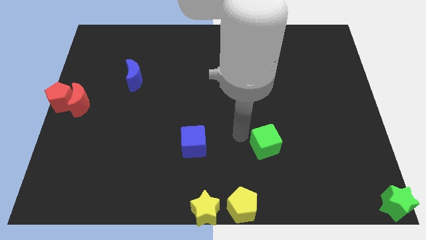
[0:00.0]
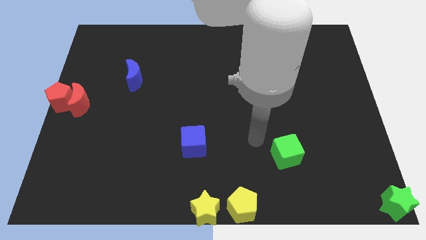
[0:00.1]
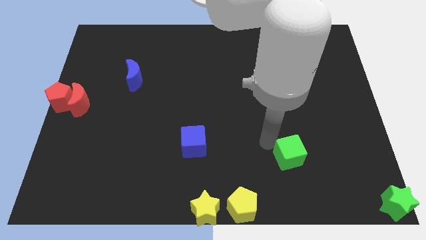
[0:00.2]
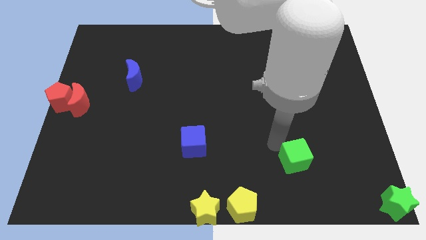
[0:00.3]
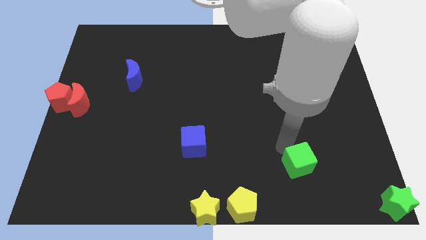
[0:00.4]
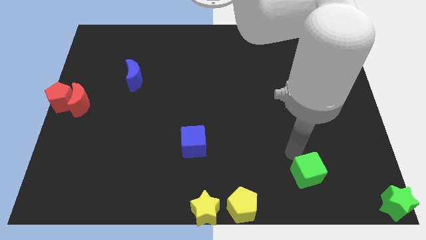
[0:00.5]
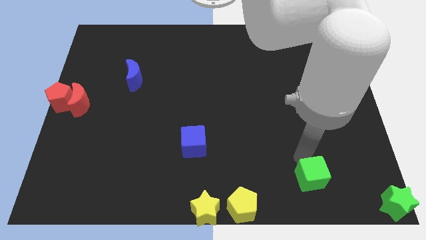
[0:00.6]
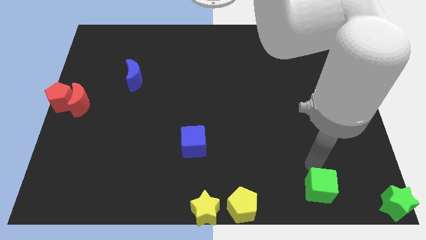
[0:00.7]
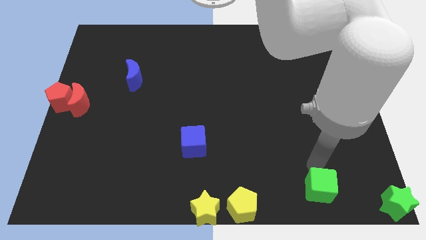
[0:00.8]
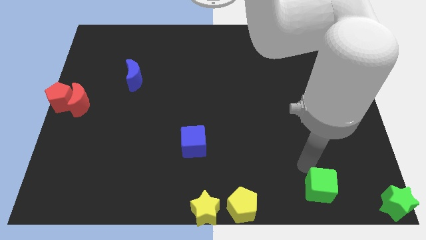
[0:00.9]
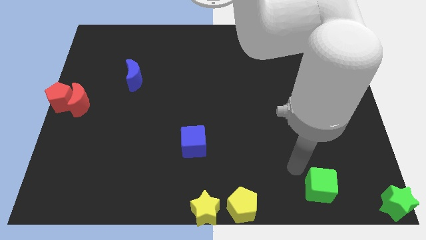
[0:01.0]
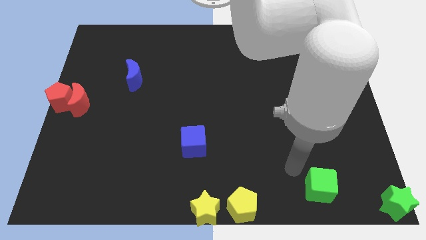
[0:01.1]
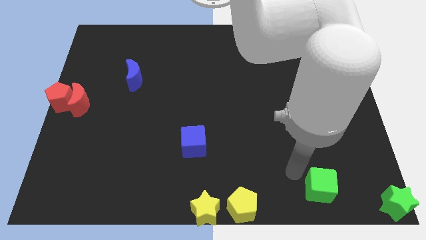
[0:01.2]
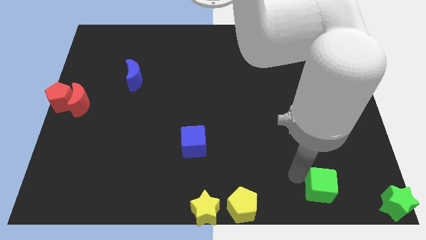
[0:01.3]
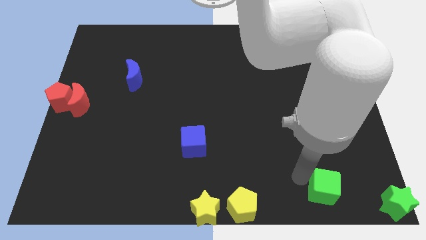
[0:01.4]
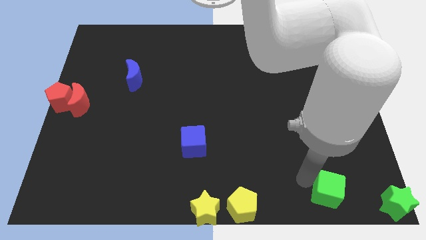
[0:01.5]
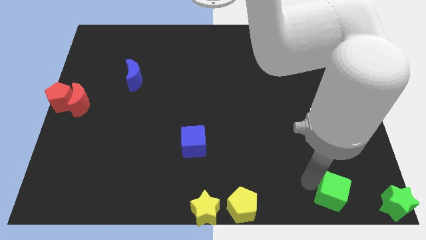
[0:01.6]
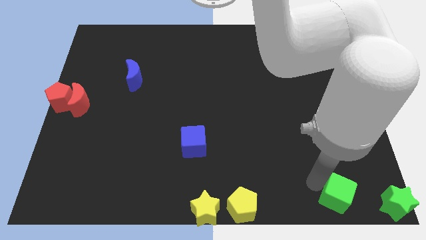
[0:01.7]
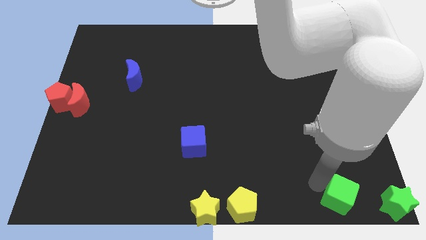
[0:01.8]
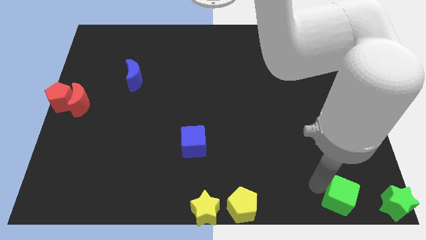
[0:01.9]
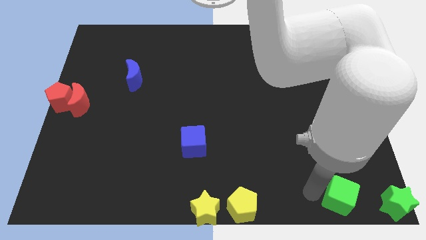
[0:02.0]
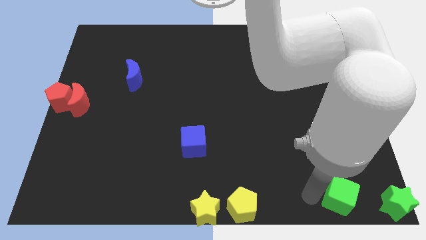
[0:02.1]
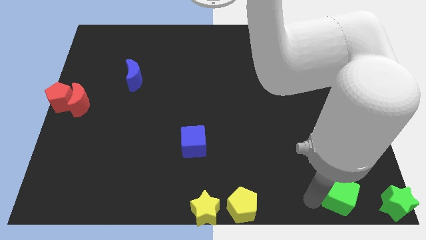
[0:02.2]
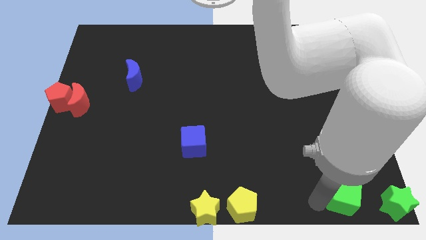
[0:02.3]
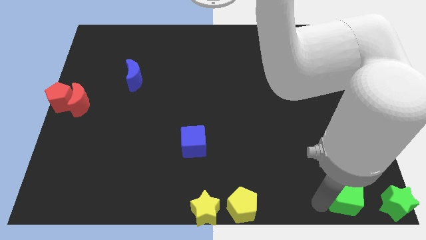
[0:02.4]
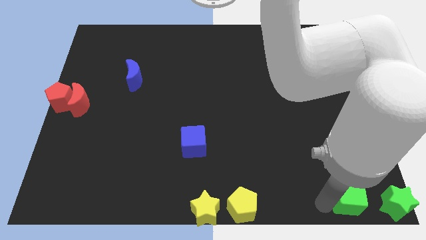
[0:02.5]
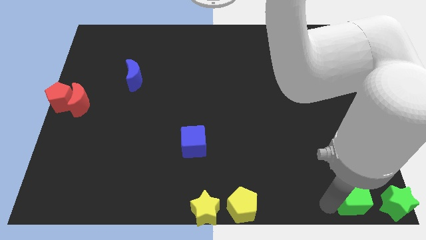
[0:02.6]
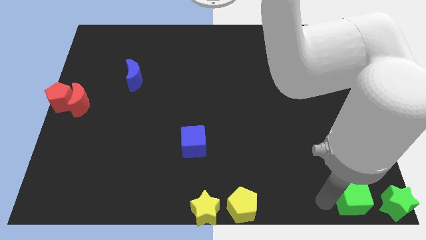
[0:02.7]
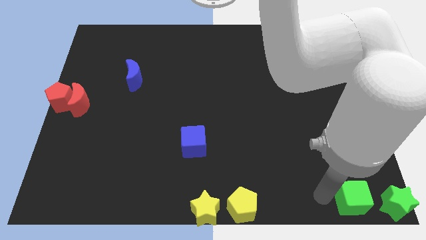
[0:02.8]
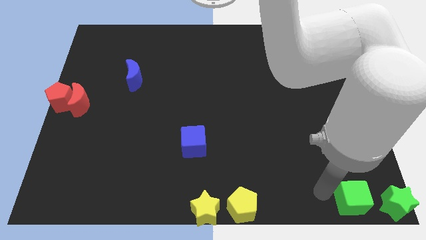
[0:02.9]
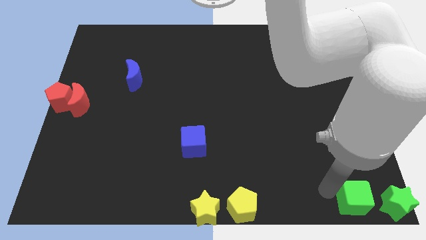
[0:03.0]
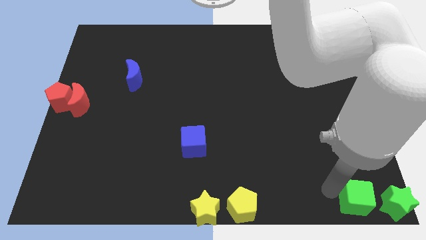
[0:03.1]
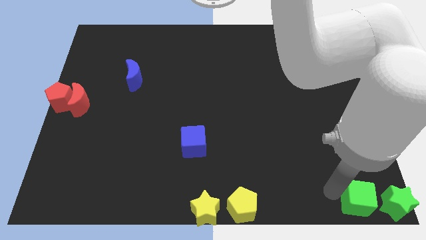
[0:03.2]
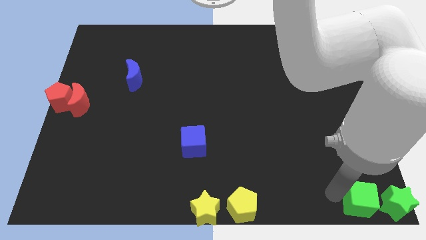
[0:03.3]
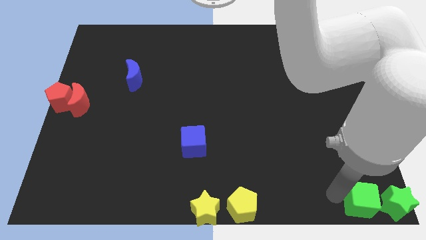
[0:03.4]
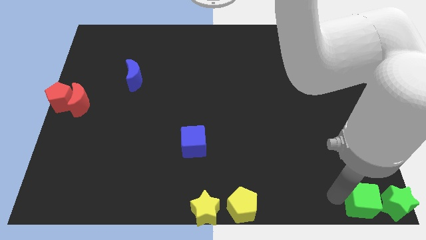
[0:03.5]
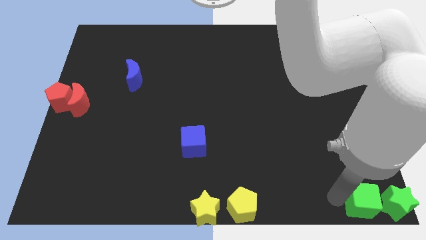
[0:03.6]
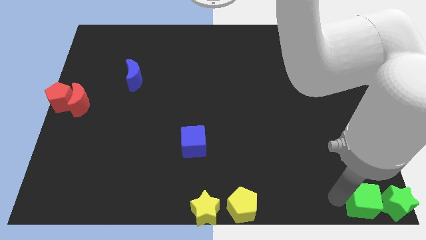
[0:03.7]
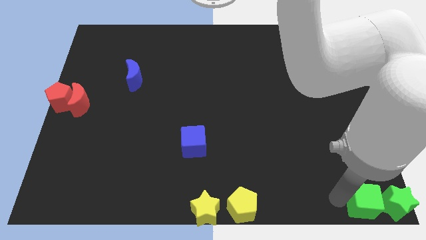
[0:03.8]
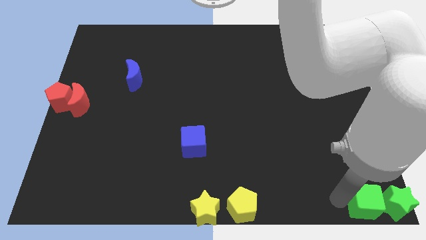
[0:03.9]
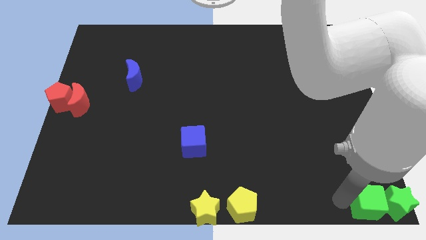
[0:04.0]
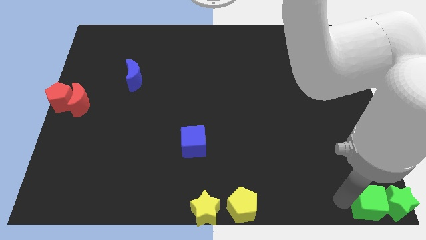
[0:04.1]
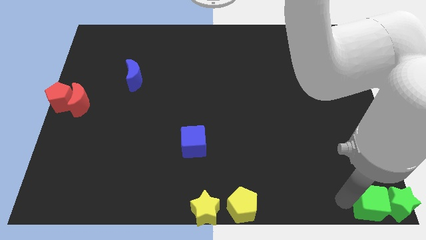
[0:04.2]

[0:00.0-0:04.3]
push the green cube into the left side of green star

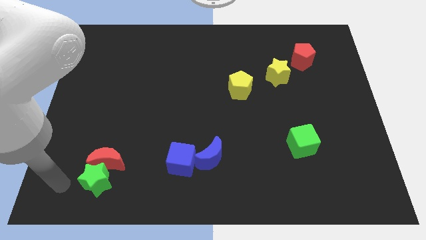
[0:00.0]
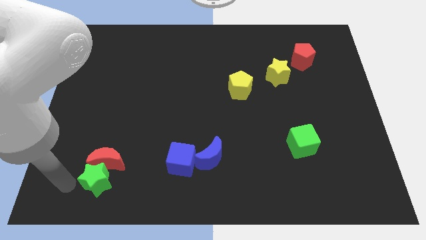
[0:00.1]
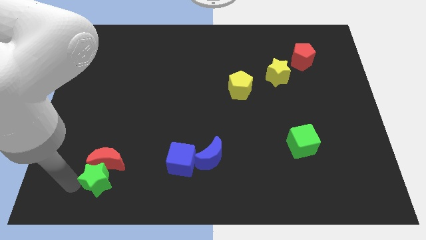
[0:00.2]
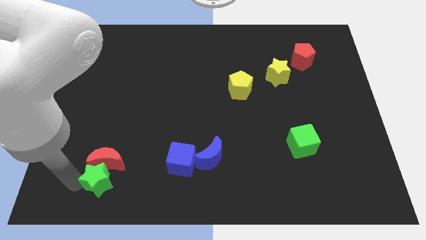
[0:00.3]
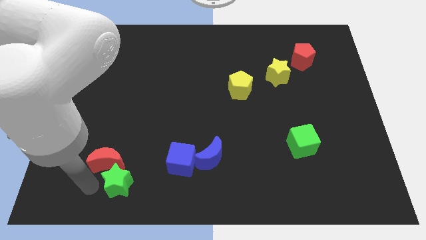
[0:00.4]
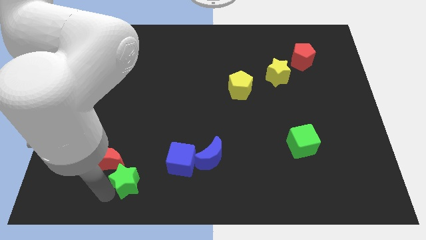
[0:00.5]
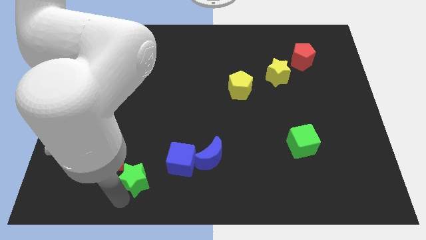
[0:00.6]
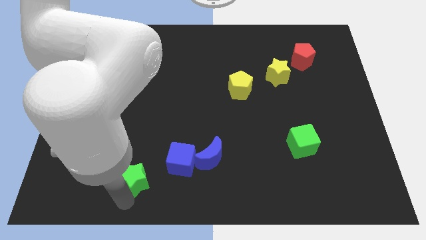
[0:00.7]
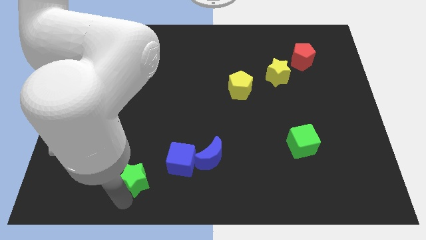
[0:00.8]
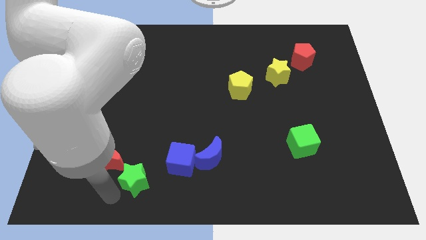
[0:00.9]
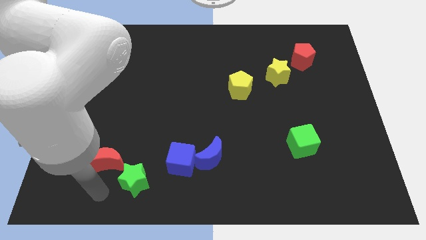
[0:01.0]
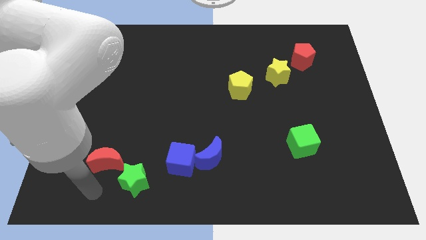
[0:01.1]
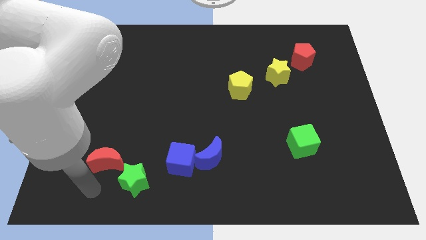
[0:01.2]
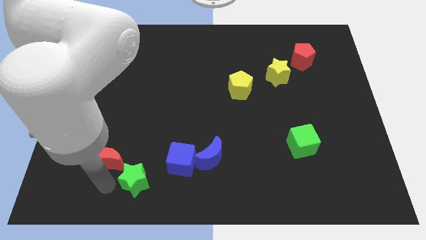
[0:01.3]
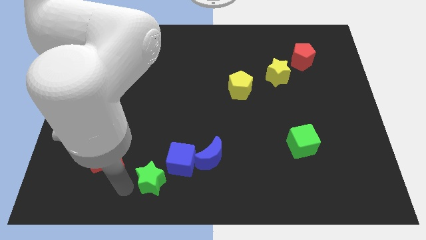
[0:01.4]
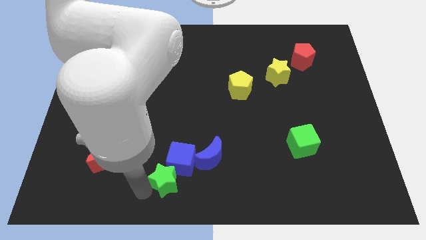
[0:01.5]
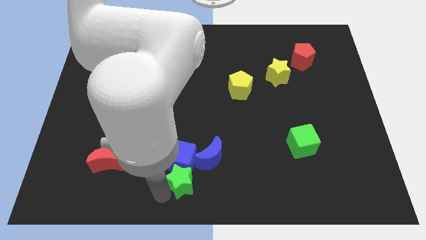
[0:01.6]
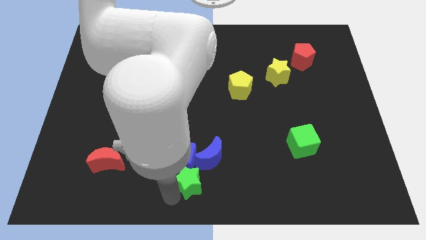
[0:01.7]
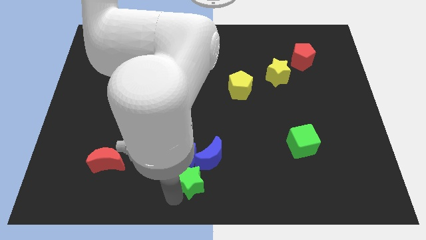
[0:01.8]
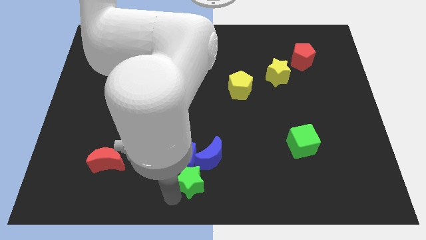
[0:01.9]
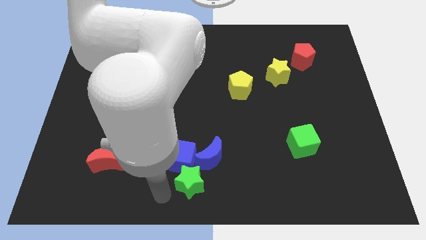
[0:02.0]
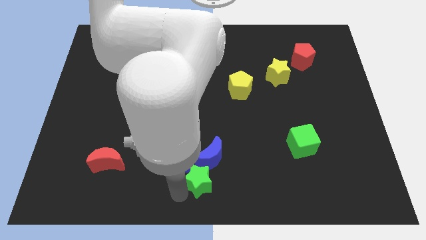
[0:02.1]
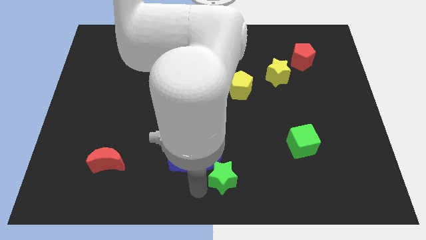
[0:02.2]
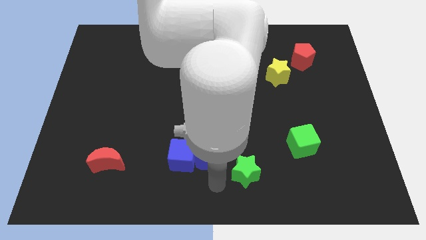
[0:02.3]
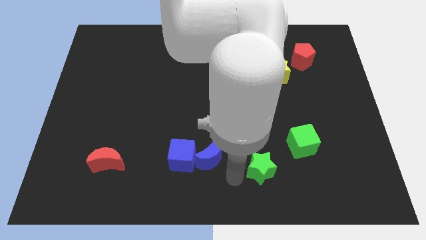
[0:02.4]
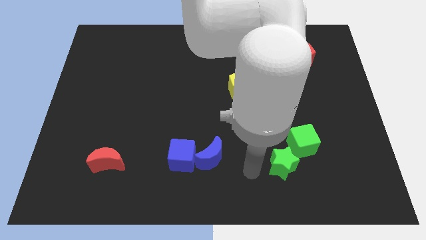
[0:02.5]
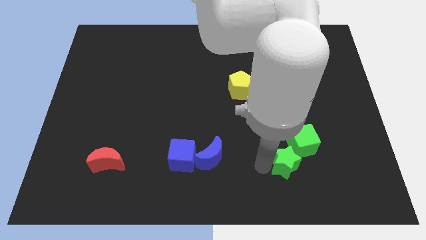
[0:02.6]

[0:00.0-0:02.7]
separate red moon and green star

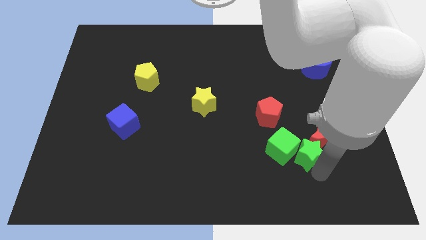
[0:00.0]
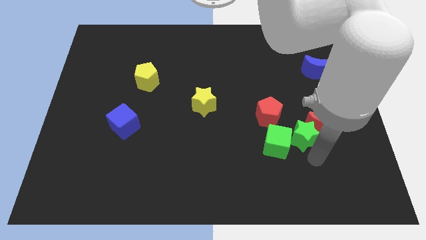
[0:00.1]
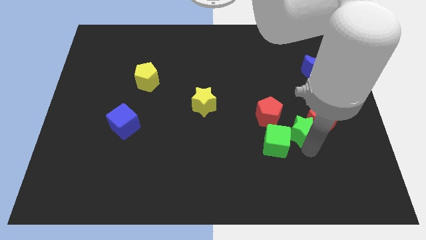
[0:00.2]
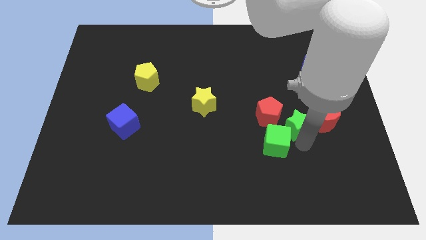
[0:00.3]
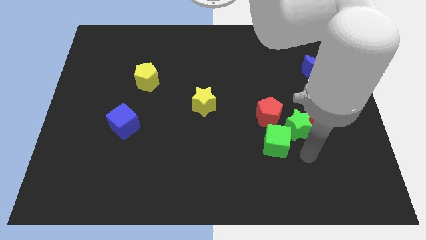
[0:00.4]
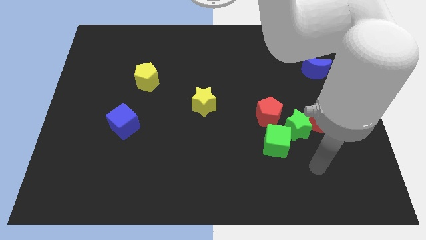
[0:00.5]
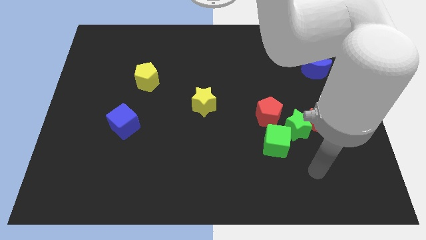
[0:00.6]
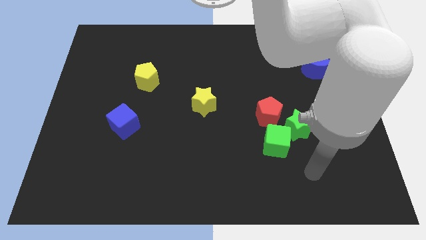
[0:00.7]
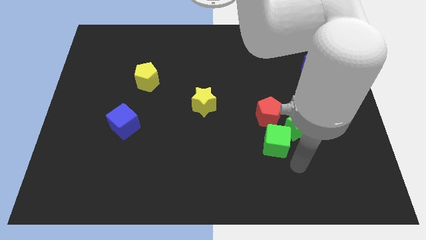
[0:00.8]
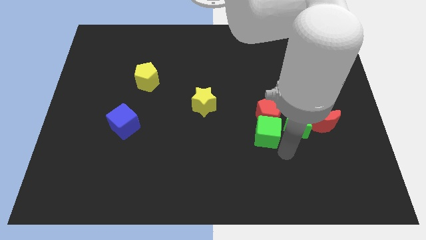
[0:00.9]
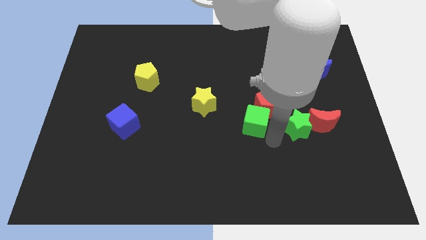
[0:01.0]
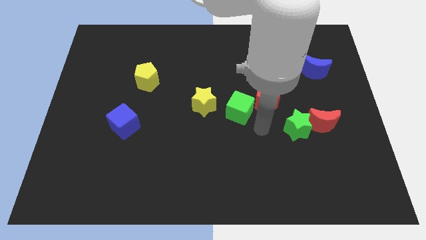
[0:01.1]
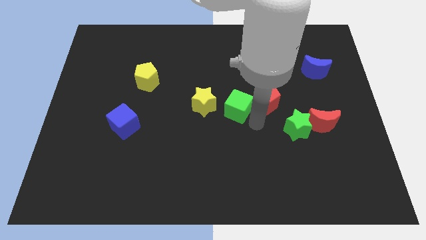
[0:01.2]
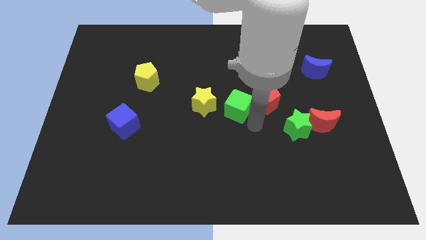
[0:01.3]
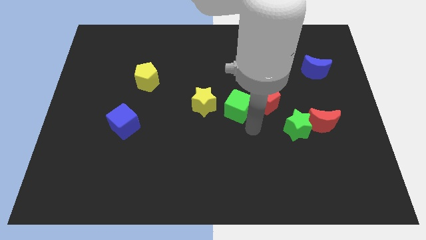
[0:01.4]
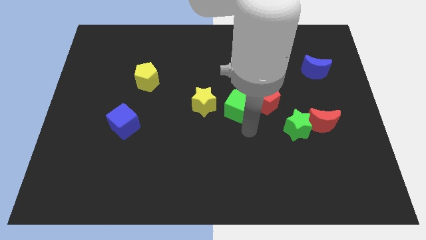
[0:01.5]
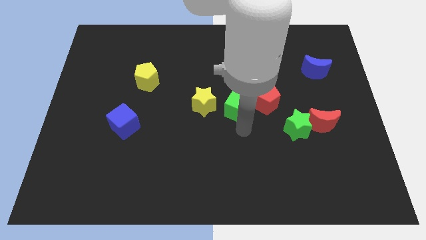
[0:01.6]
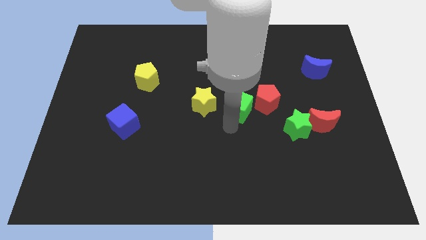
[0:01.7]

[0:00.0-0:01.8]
move the green cube towards the center
